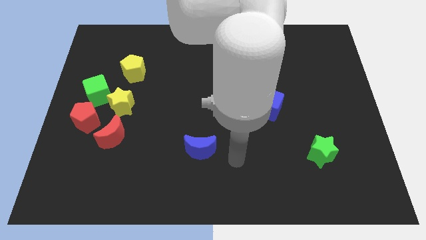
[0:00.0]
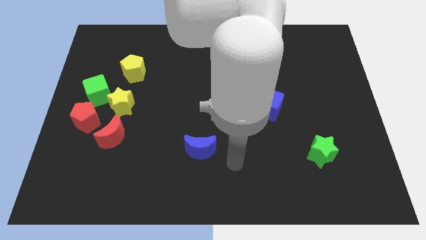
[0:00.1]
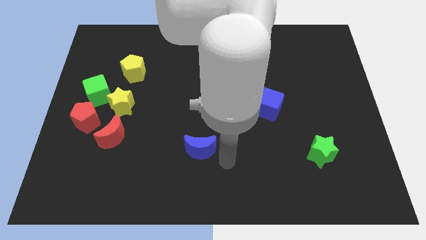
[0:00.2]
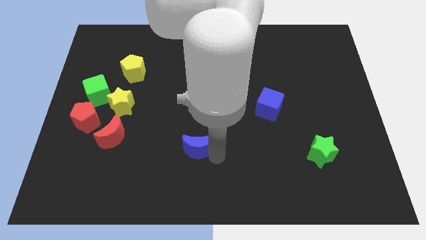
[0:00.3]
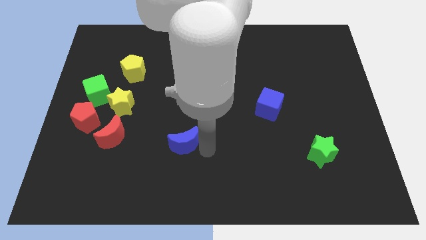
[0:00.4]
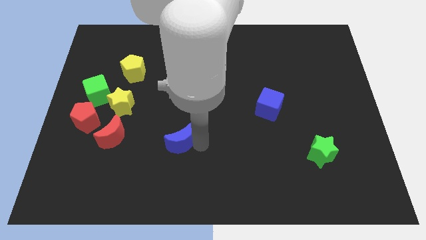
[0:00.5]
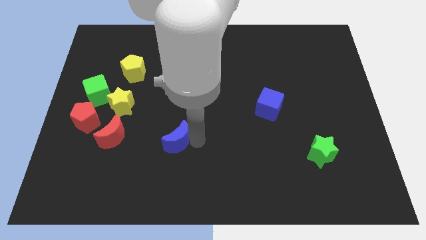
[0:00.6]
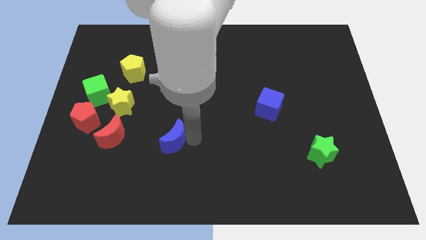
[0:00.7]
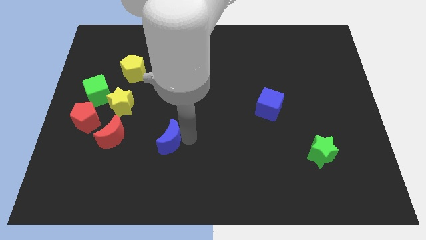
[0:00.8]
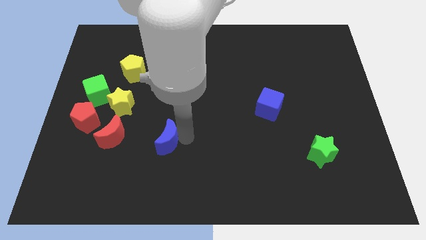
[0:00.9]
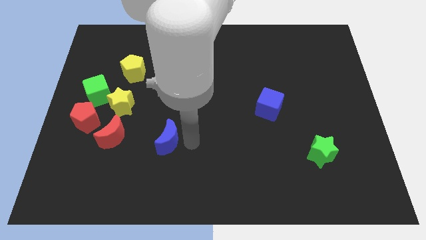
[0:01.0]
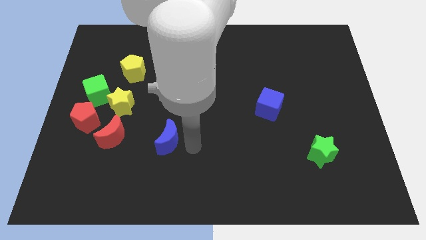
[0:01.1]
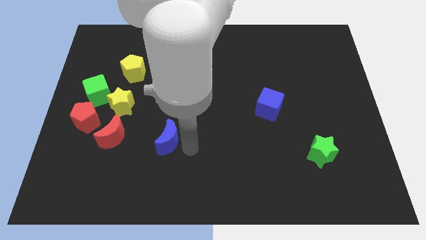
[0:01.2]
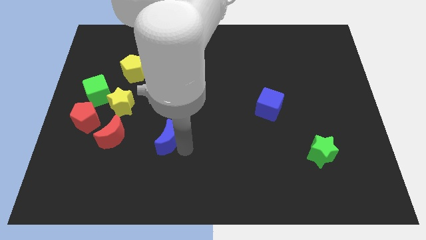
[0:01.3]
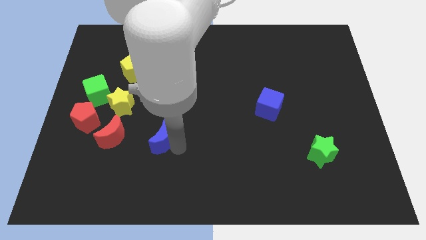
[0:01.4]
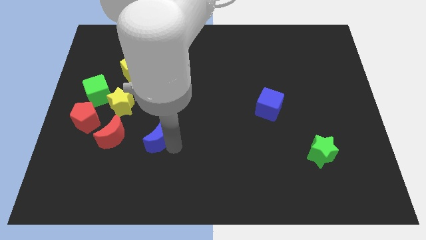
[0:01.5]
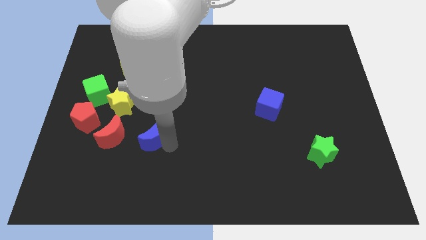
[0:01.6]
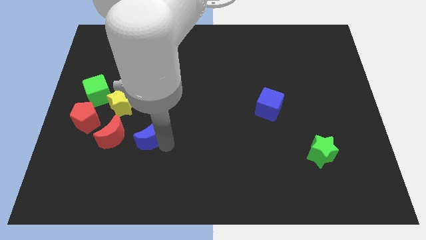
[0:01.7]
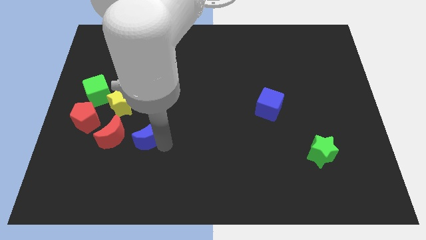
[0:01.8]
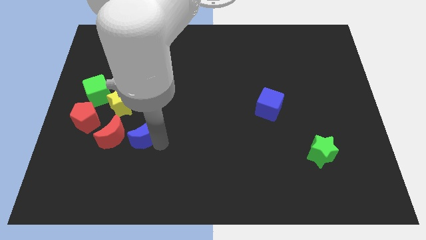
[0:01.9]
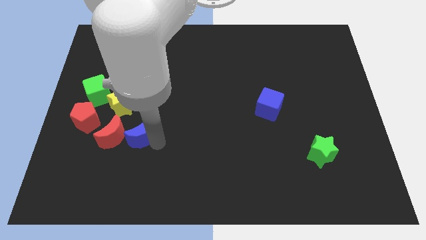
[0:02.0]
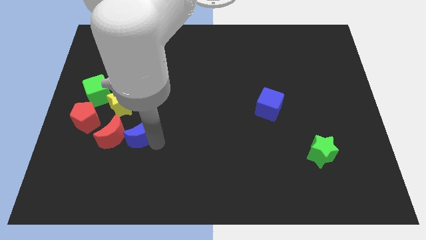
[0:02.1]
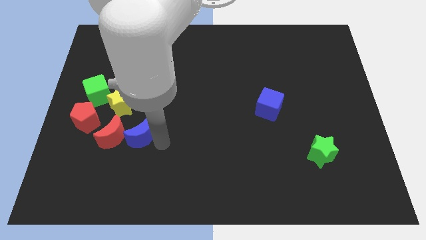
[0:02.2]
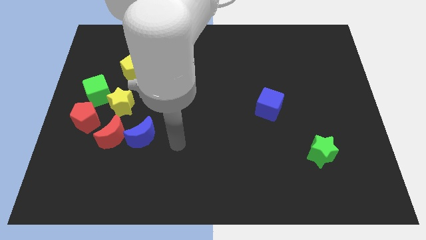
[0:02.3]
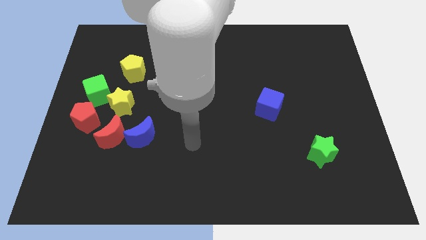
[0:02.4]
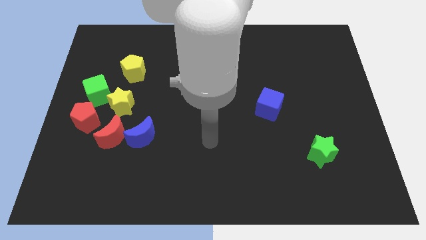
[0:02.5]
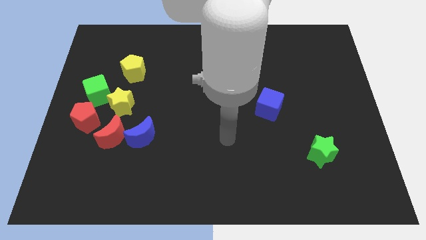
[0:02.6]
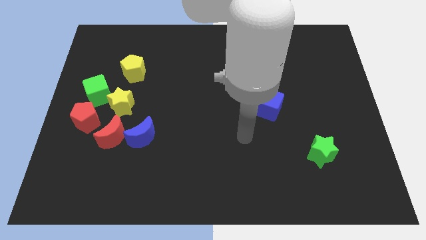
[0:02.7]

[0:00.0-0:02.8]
move the blue crescent to the right of the red crescent

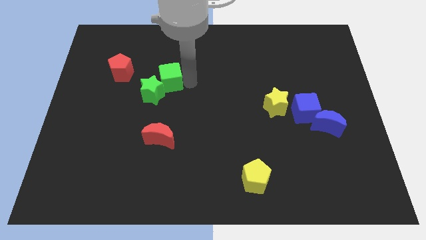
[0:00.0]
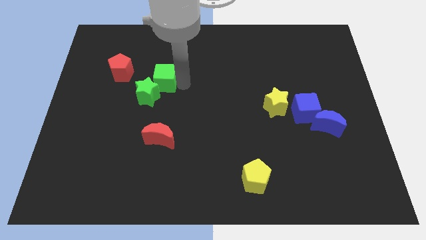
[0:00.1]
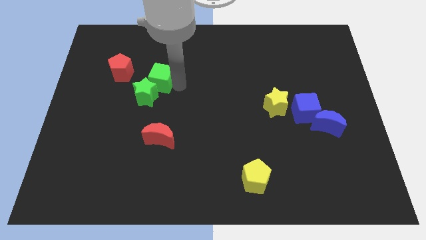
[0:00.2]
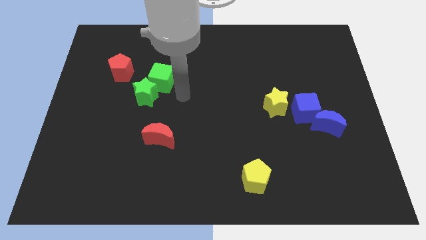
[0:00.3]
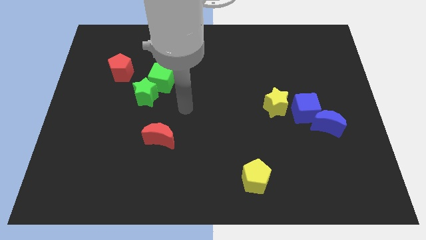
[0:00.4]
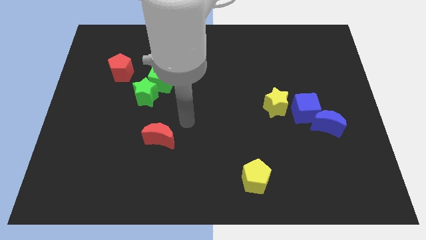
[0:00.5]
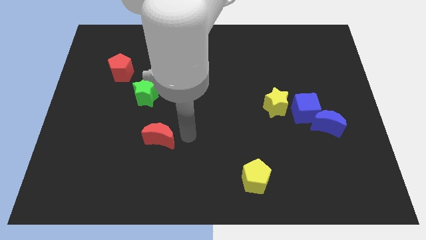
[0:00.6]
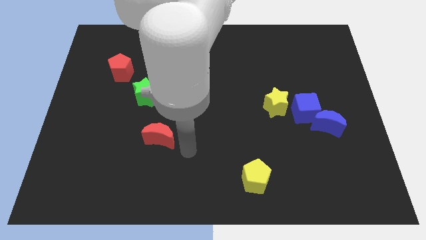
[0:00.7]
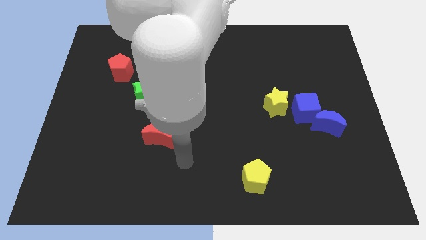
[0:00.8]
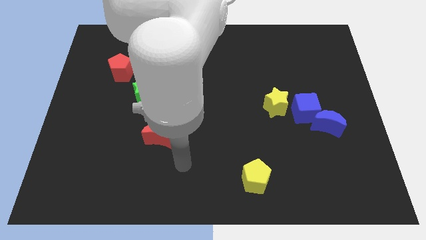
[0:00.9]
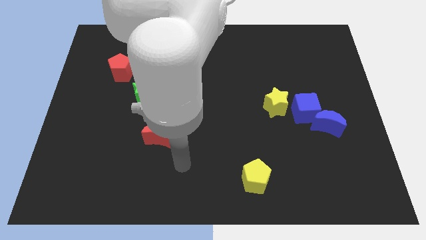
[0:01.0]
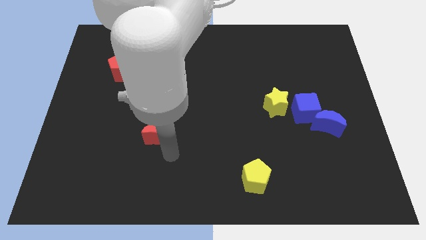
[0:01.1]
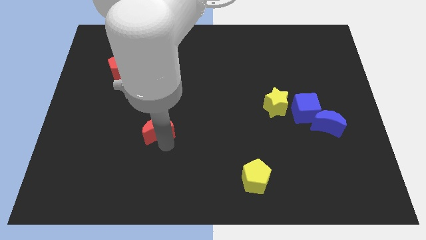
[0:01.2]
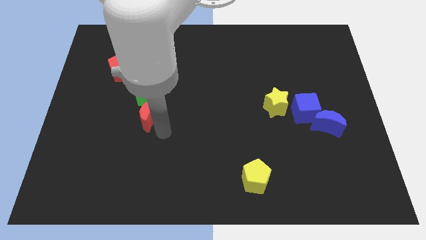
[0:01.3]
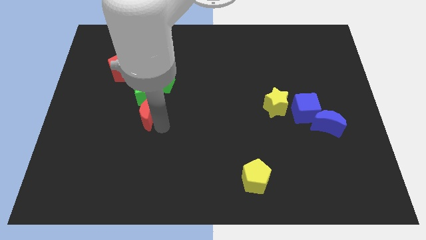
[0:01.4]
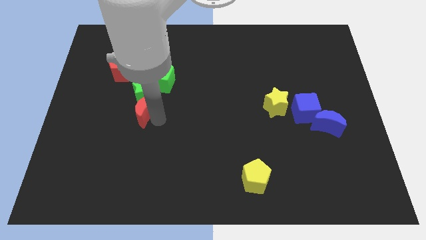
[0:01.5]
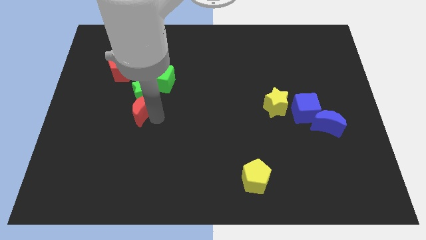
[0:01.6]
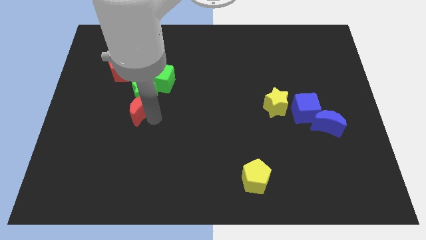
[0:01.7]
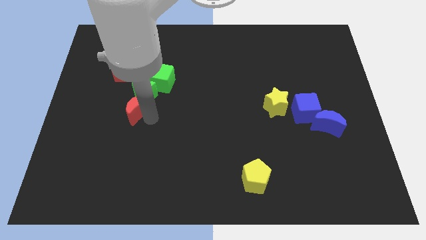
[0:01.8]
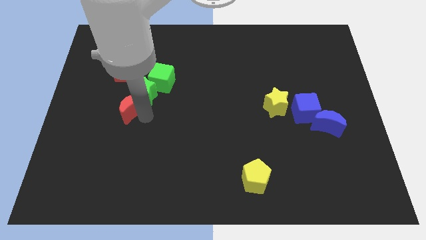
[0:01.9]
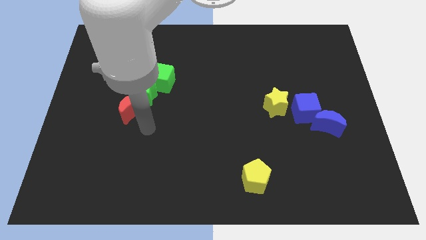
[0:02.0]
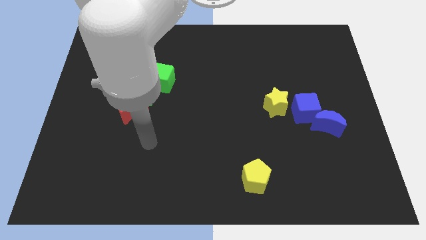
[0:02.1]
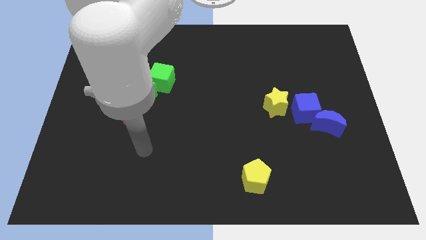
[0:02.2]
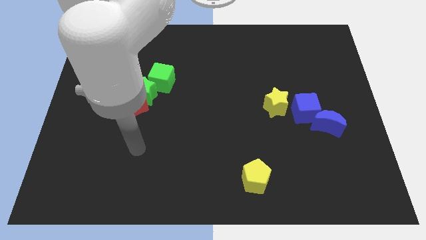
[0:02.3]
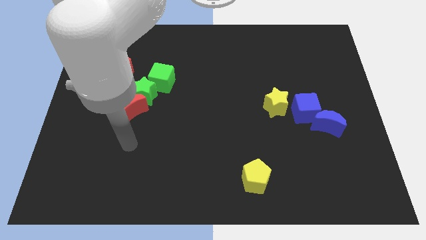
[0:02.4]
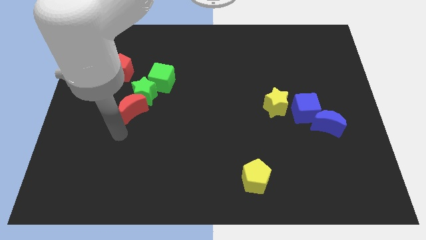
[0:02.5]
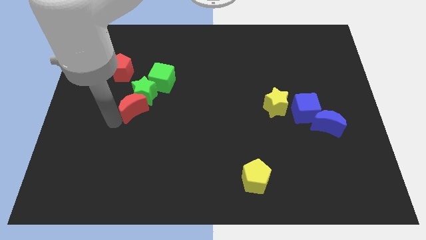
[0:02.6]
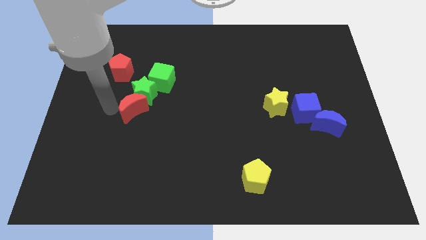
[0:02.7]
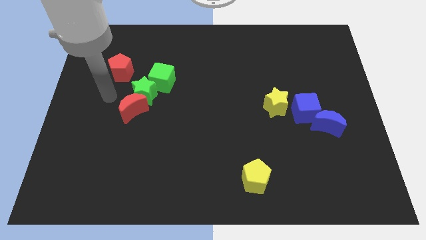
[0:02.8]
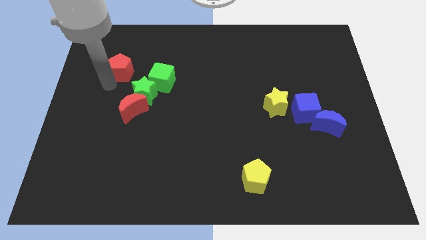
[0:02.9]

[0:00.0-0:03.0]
move the red crescent below the green star

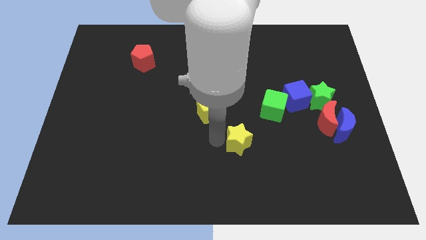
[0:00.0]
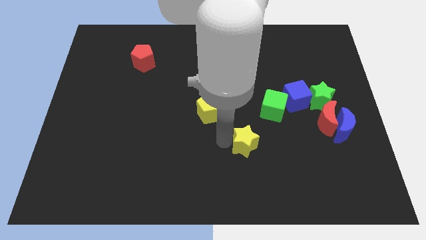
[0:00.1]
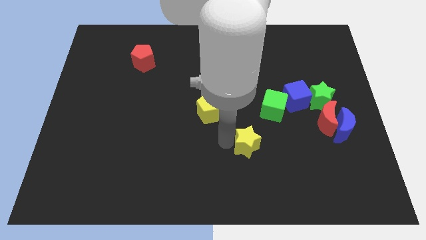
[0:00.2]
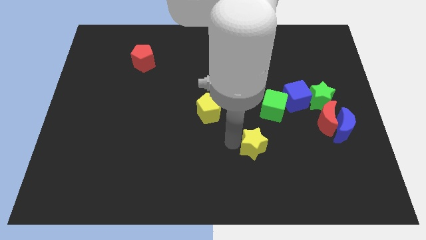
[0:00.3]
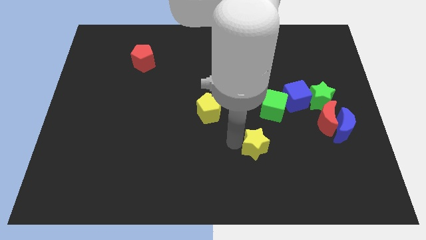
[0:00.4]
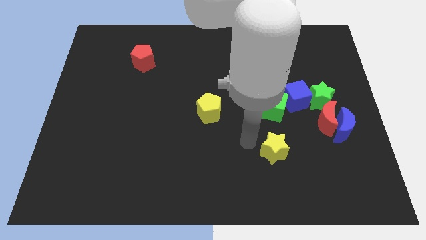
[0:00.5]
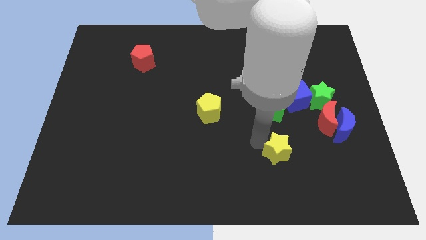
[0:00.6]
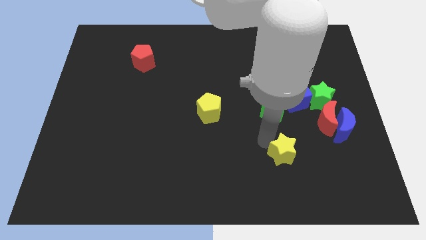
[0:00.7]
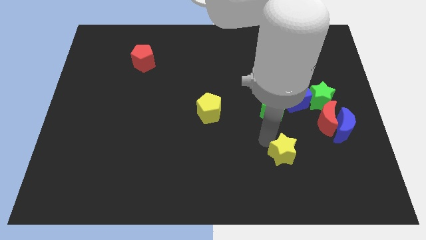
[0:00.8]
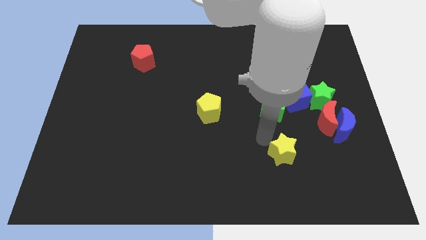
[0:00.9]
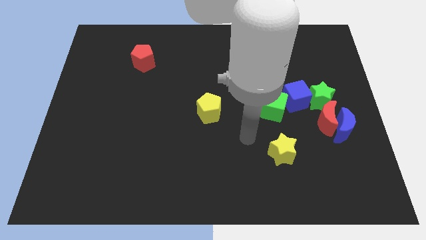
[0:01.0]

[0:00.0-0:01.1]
move yellow star slightly to the center

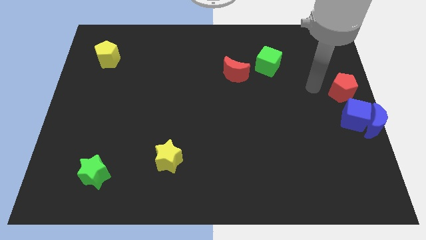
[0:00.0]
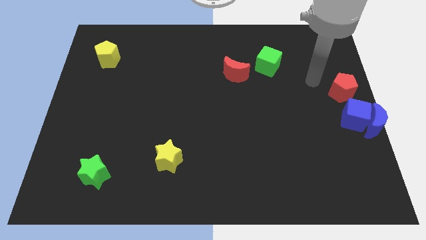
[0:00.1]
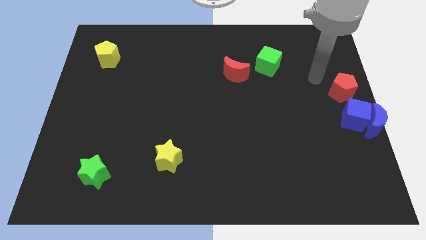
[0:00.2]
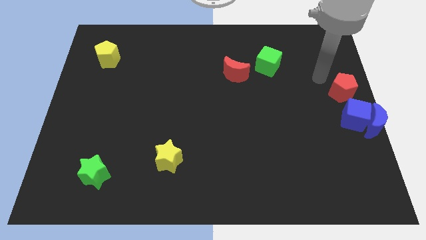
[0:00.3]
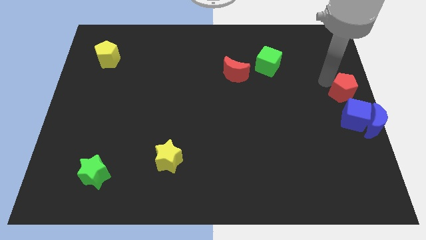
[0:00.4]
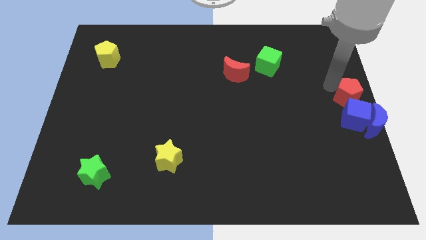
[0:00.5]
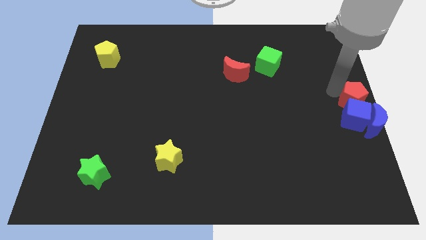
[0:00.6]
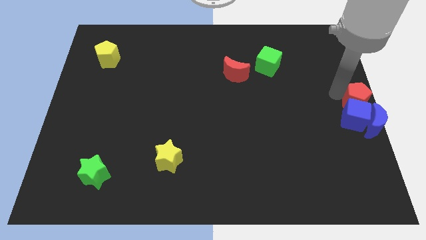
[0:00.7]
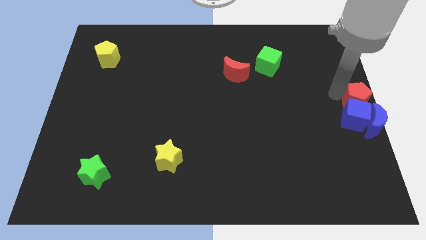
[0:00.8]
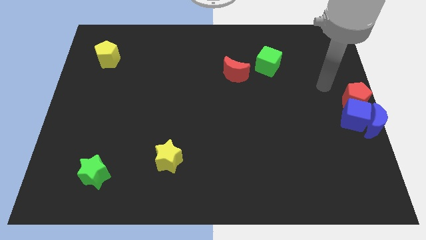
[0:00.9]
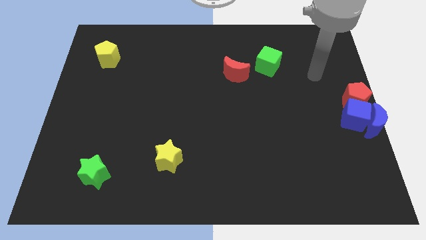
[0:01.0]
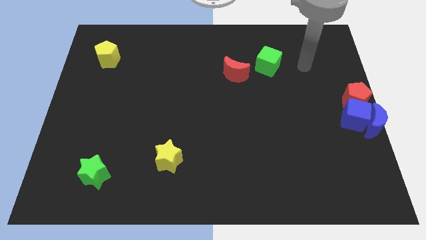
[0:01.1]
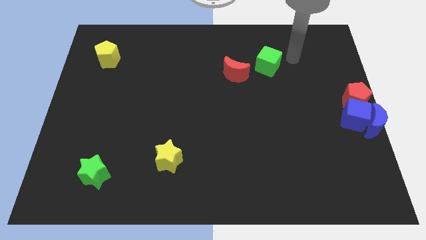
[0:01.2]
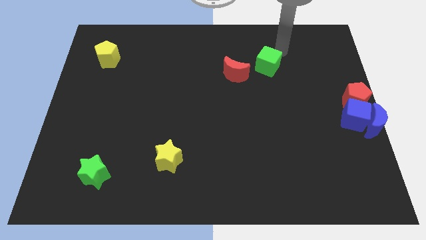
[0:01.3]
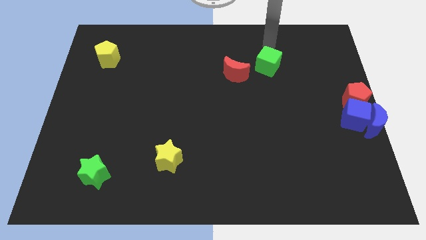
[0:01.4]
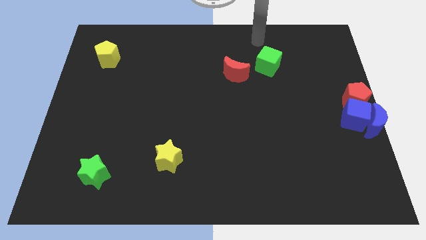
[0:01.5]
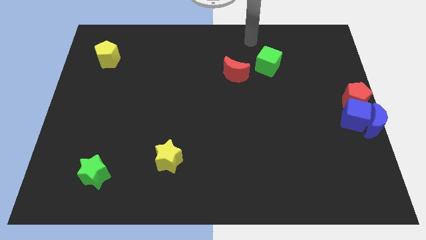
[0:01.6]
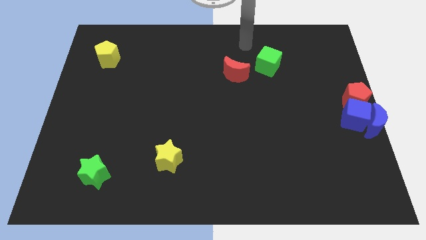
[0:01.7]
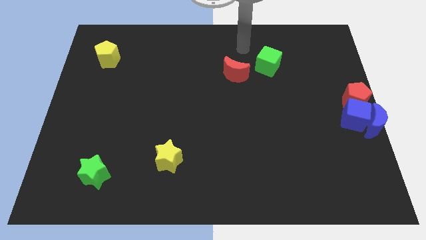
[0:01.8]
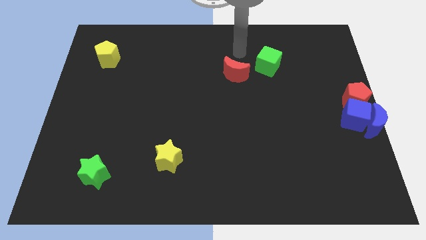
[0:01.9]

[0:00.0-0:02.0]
move the red pentagon into the blue cube

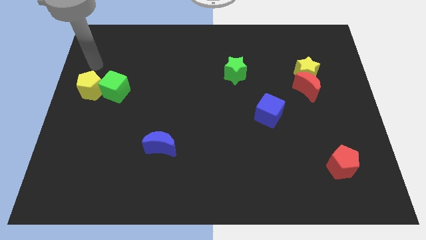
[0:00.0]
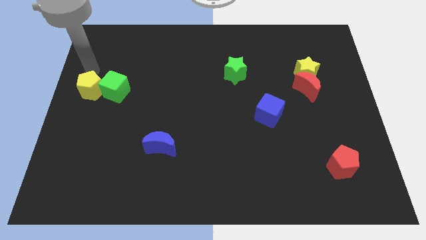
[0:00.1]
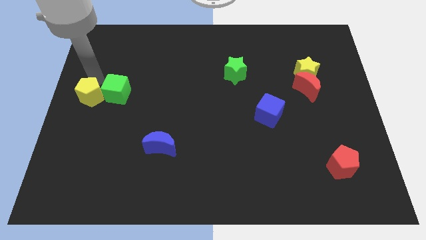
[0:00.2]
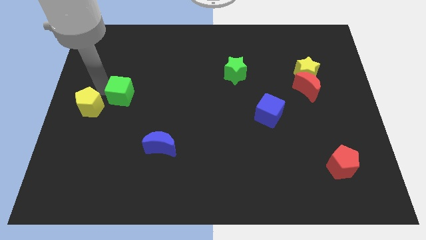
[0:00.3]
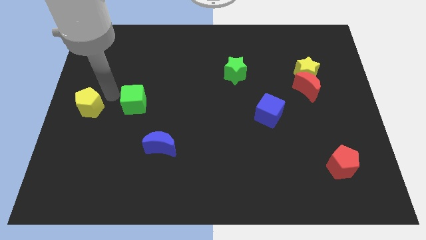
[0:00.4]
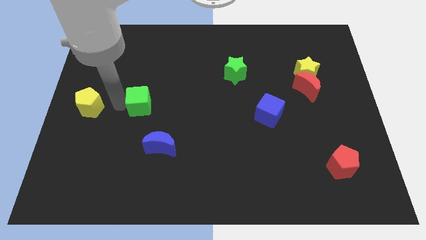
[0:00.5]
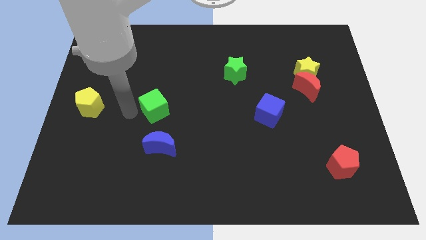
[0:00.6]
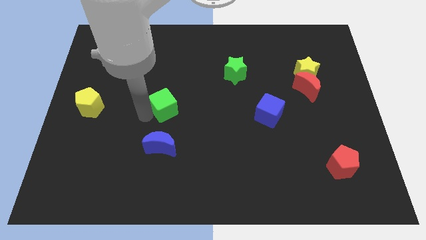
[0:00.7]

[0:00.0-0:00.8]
push green cube above blue crescent
